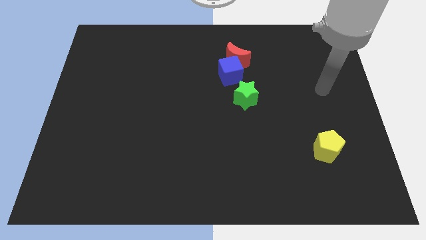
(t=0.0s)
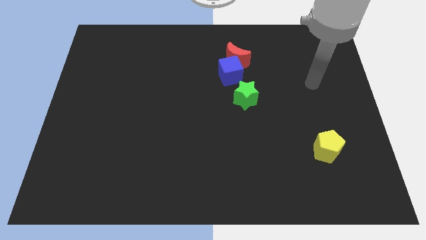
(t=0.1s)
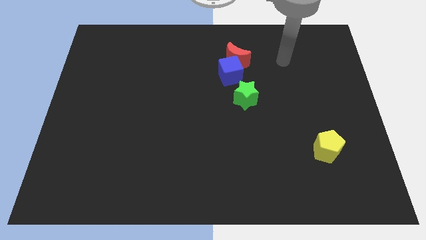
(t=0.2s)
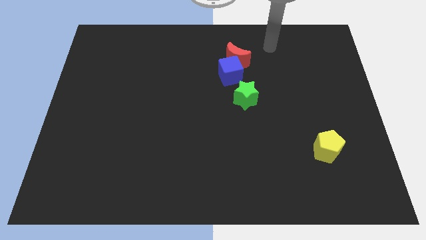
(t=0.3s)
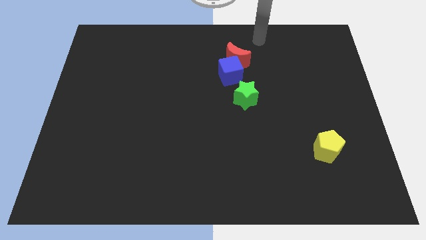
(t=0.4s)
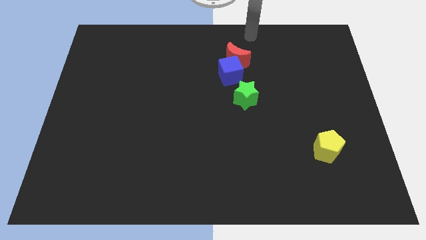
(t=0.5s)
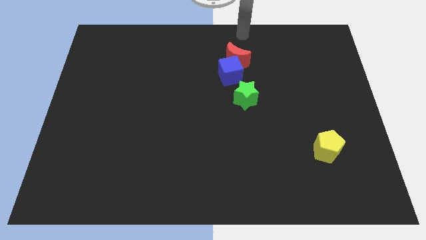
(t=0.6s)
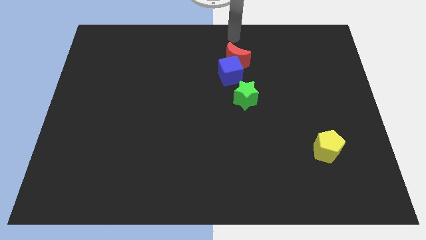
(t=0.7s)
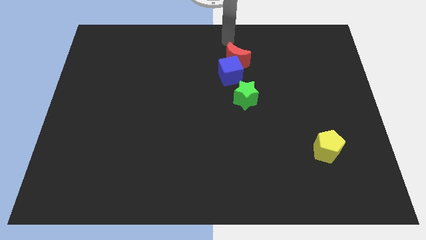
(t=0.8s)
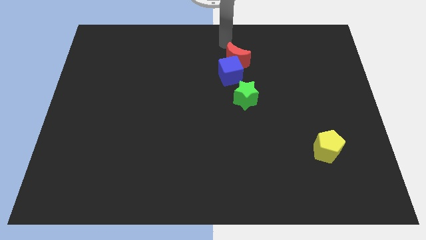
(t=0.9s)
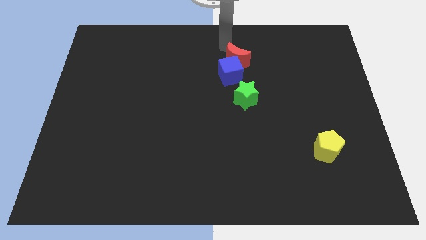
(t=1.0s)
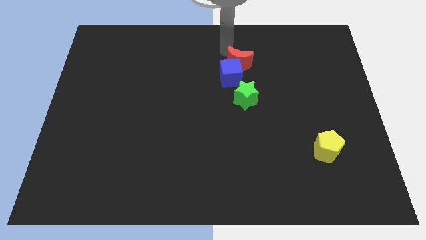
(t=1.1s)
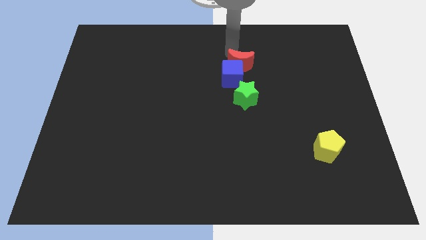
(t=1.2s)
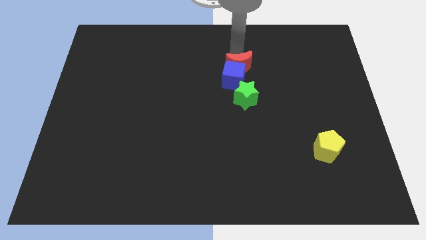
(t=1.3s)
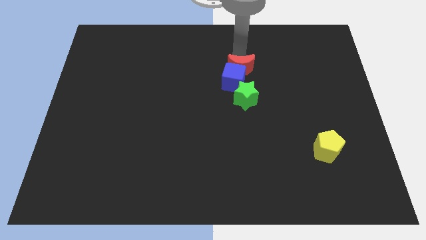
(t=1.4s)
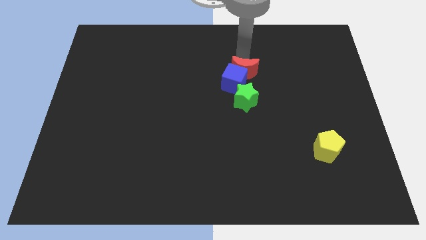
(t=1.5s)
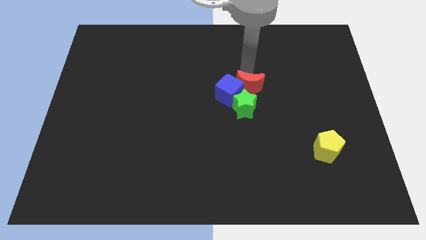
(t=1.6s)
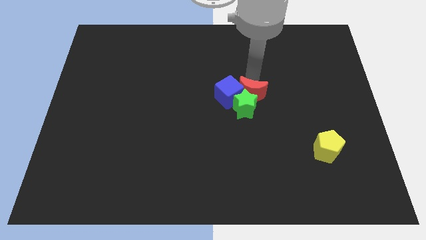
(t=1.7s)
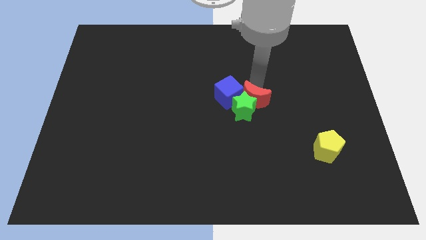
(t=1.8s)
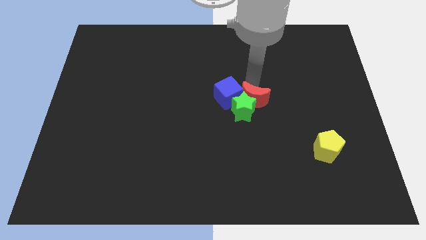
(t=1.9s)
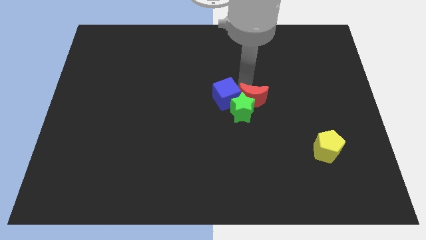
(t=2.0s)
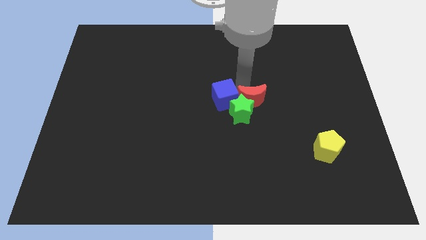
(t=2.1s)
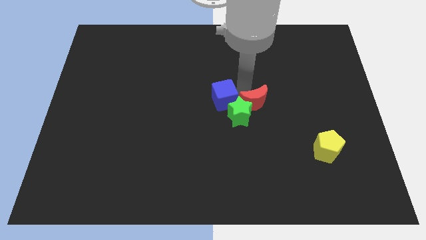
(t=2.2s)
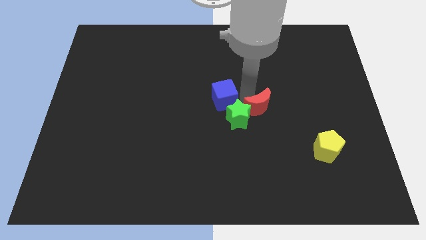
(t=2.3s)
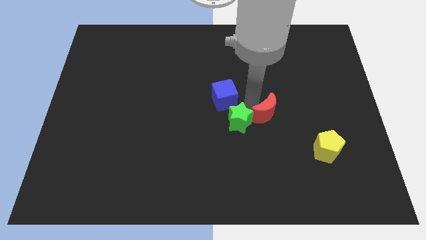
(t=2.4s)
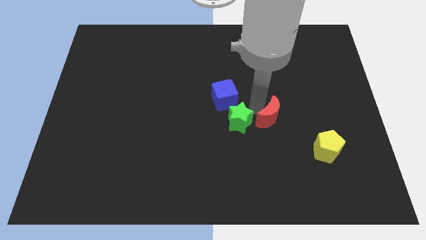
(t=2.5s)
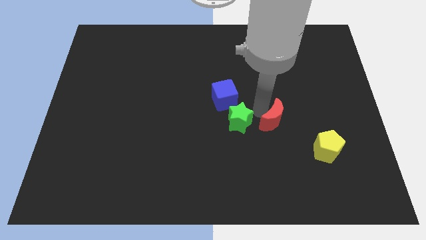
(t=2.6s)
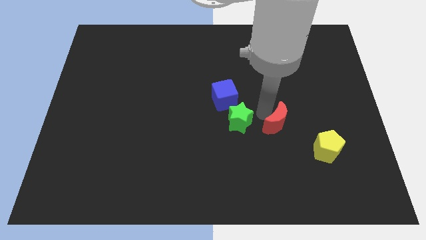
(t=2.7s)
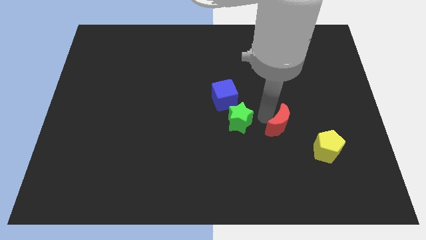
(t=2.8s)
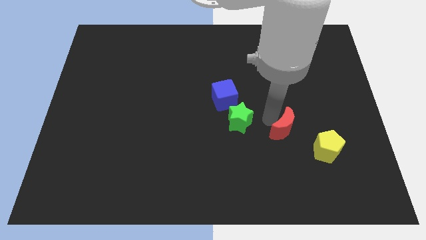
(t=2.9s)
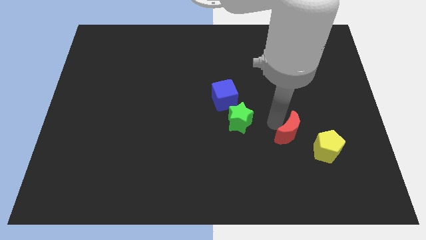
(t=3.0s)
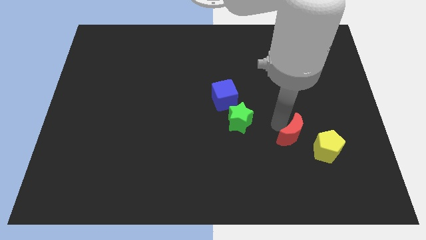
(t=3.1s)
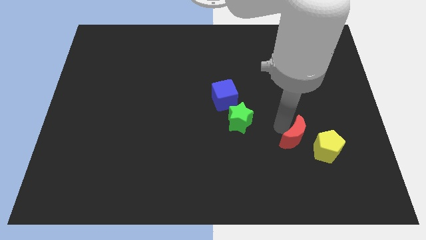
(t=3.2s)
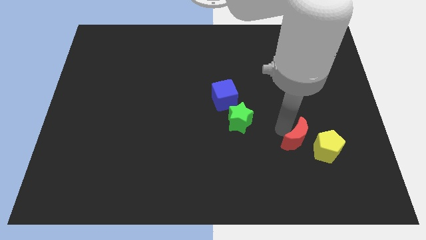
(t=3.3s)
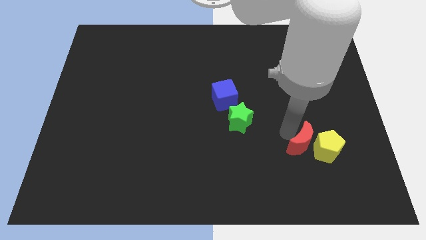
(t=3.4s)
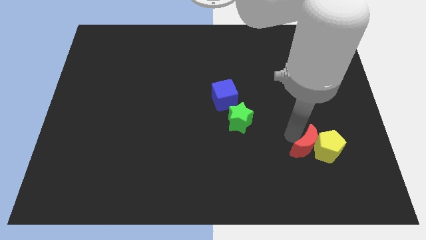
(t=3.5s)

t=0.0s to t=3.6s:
move the red block close to the yellow block

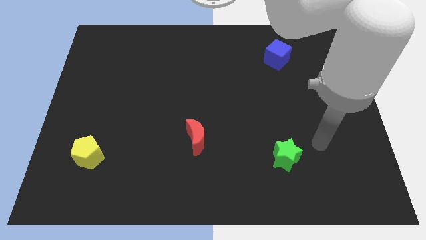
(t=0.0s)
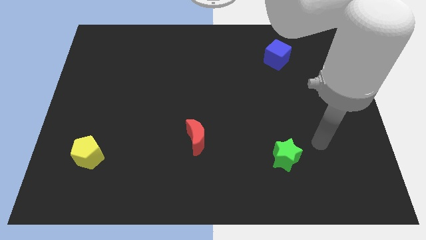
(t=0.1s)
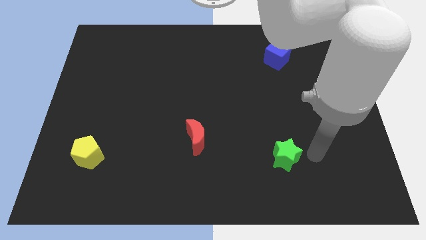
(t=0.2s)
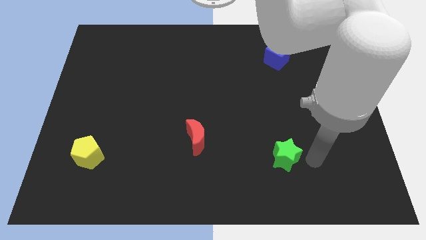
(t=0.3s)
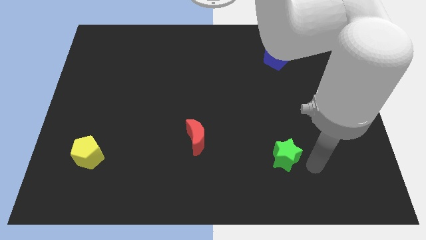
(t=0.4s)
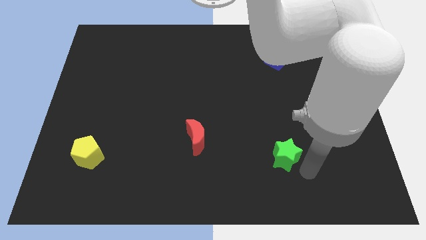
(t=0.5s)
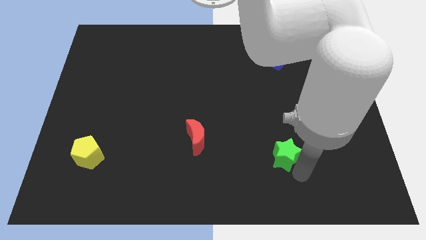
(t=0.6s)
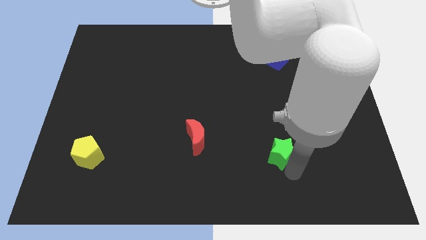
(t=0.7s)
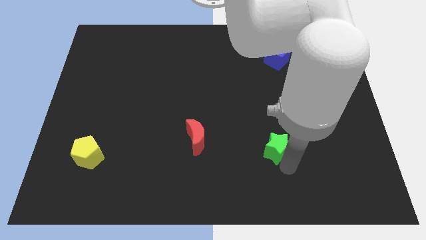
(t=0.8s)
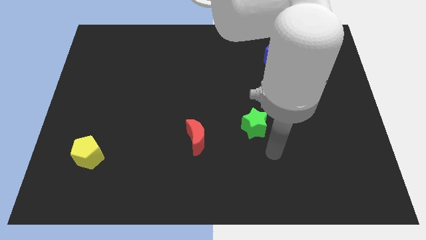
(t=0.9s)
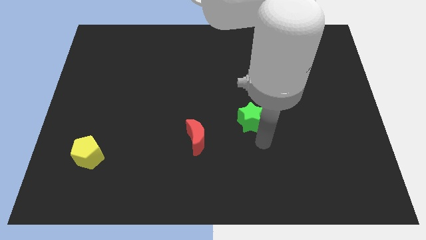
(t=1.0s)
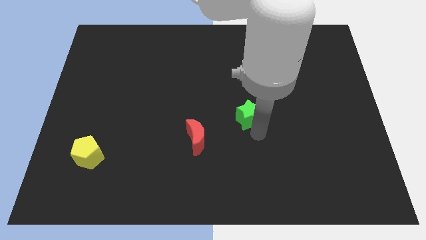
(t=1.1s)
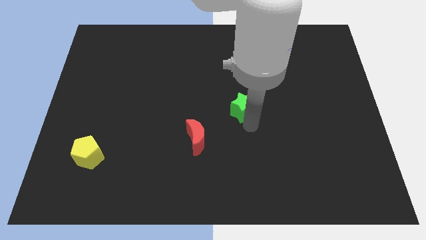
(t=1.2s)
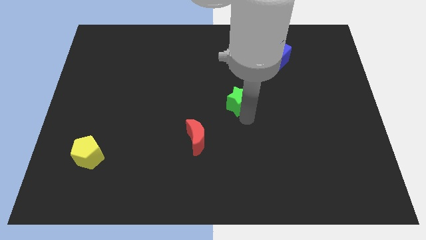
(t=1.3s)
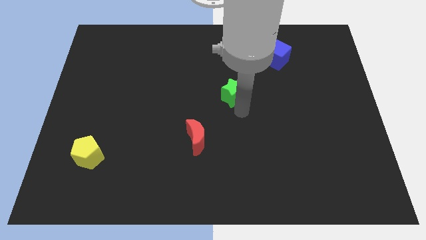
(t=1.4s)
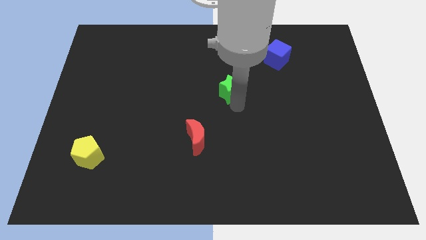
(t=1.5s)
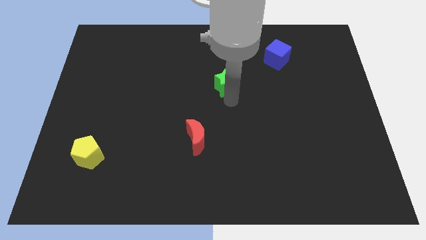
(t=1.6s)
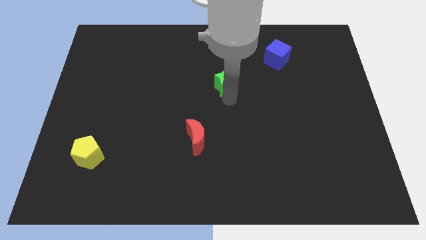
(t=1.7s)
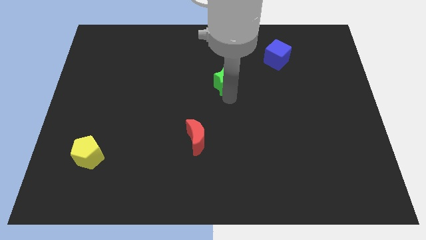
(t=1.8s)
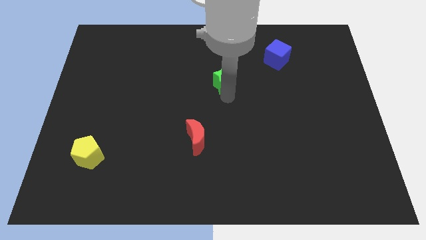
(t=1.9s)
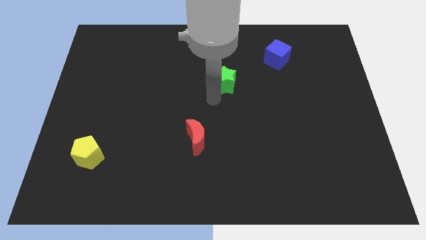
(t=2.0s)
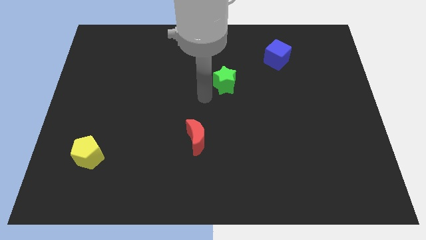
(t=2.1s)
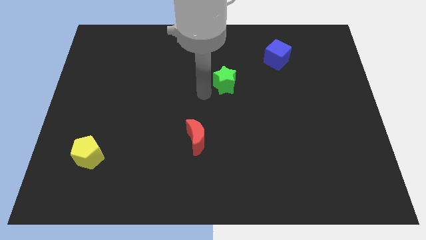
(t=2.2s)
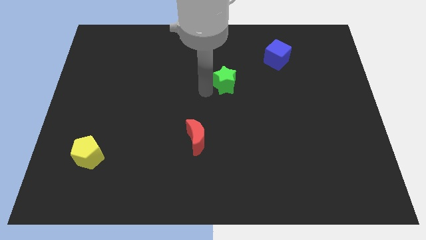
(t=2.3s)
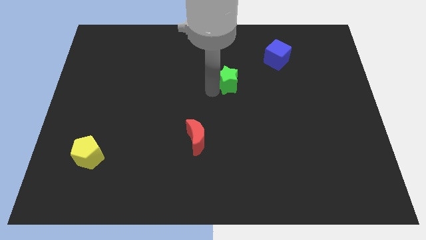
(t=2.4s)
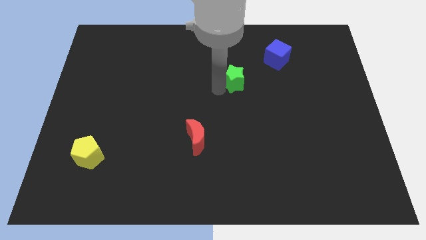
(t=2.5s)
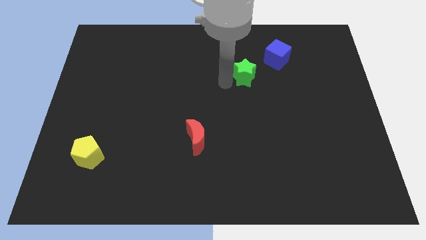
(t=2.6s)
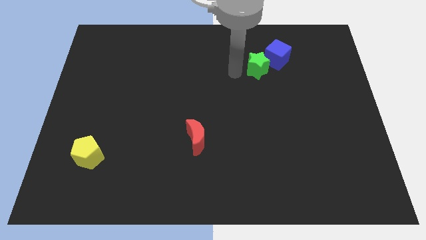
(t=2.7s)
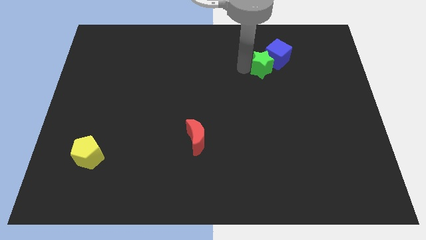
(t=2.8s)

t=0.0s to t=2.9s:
put the star towards the blue block

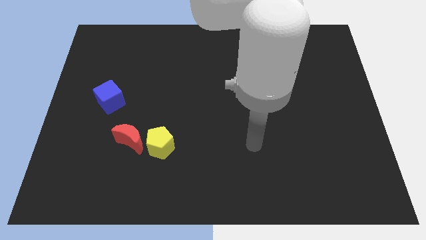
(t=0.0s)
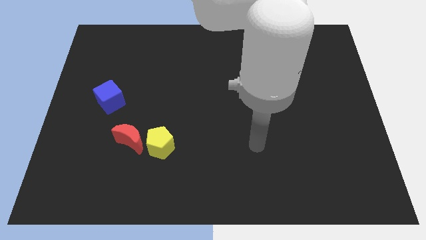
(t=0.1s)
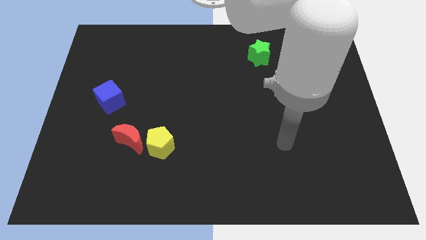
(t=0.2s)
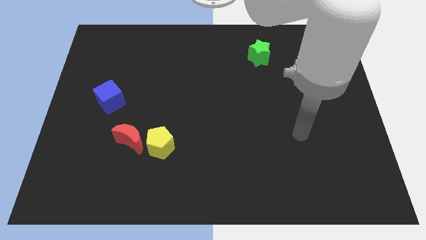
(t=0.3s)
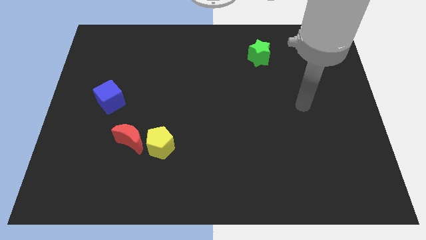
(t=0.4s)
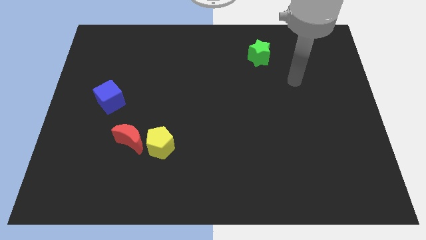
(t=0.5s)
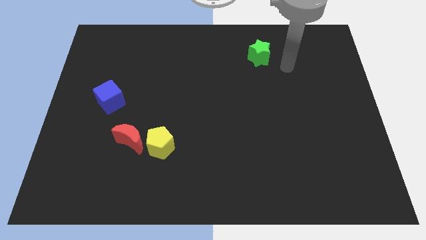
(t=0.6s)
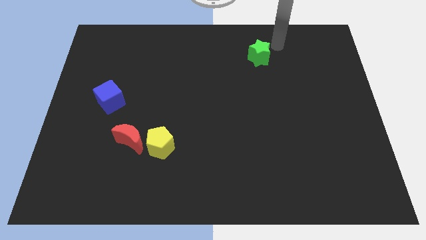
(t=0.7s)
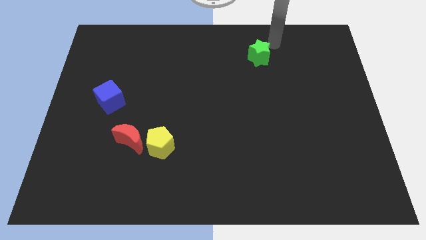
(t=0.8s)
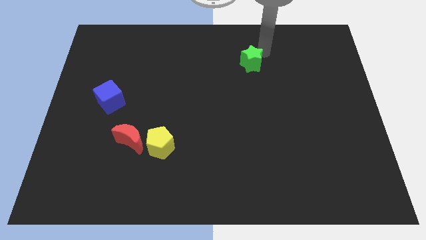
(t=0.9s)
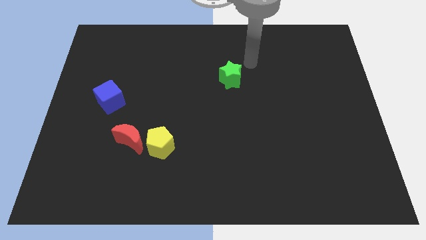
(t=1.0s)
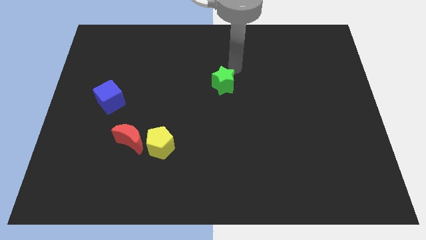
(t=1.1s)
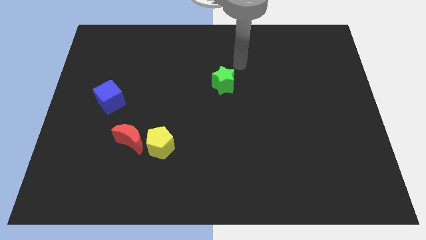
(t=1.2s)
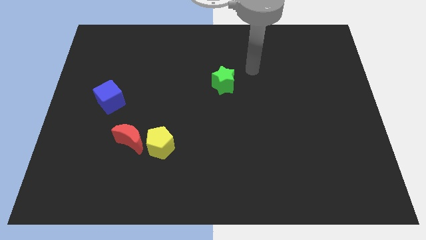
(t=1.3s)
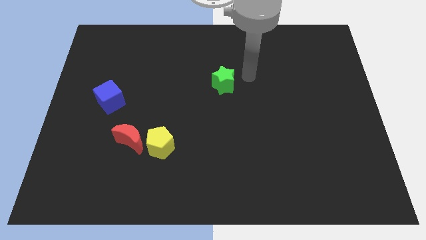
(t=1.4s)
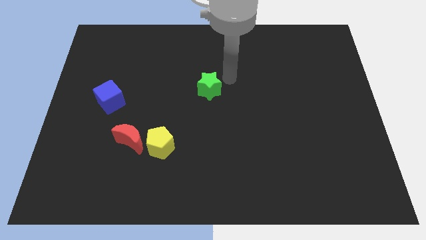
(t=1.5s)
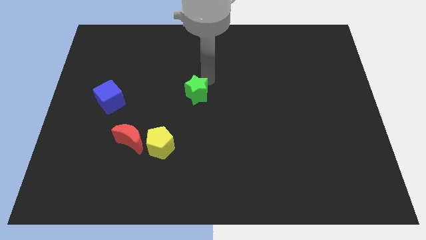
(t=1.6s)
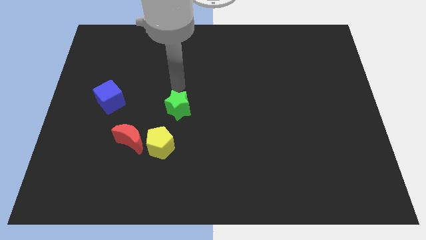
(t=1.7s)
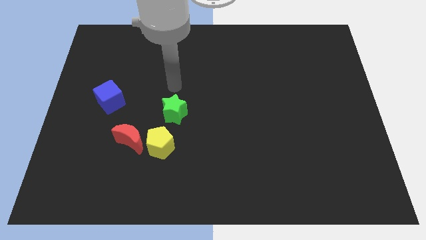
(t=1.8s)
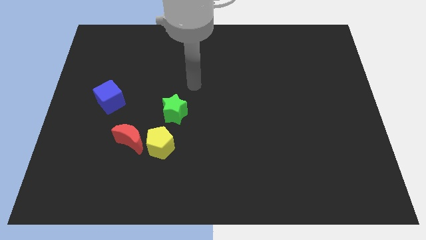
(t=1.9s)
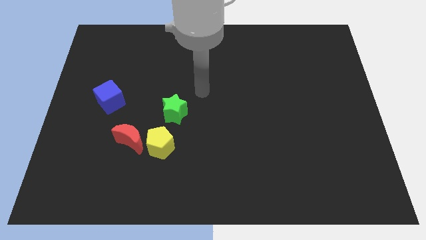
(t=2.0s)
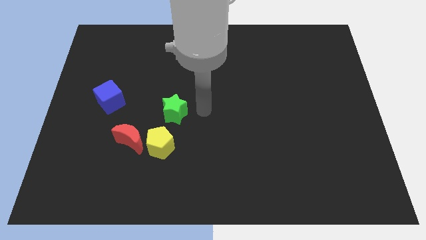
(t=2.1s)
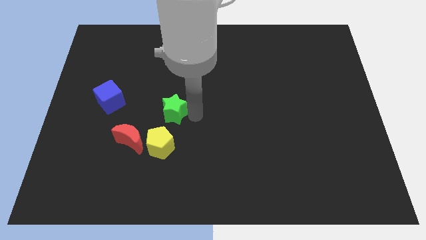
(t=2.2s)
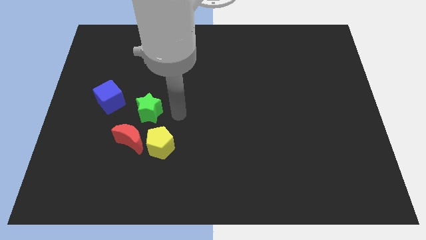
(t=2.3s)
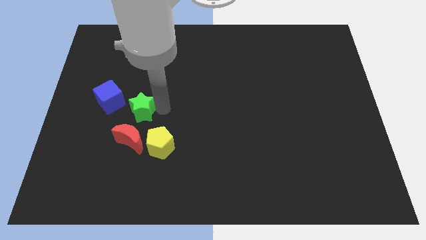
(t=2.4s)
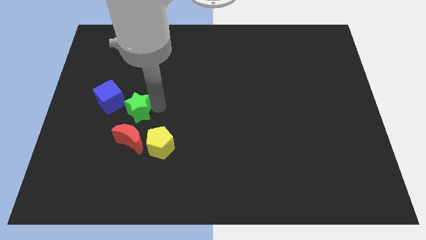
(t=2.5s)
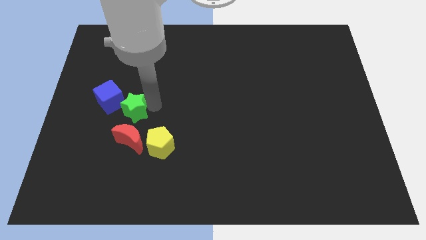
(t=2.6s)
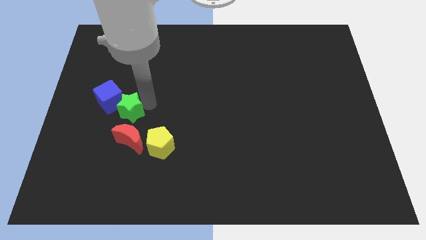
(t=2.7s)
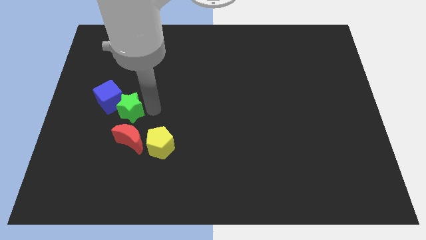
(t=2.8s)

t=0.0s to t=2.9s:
push the green star to the cube
